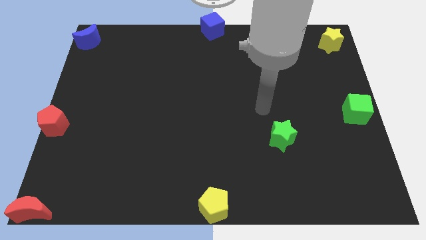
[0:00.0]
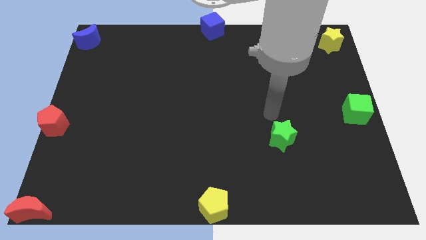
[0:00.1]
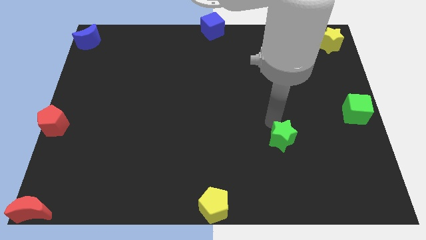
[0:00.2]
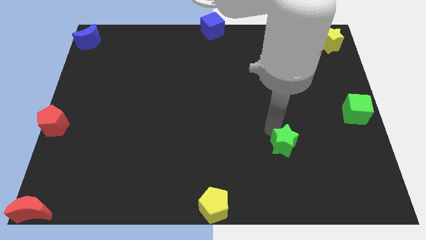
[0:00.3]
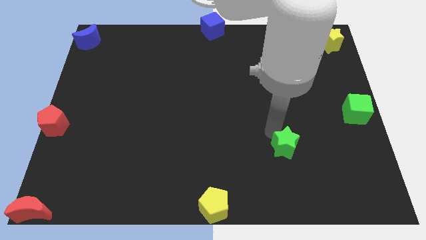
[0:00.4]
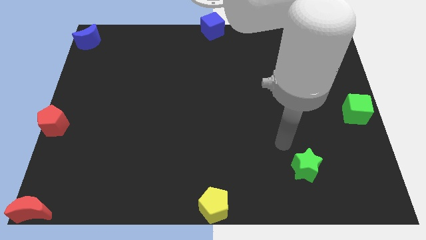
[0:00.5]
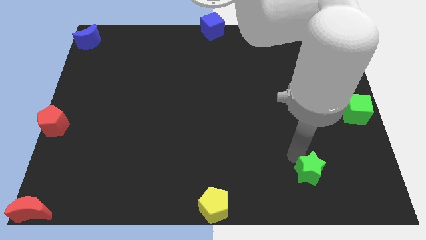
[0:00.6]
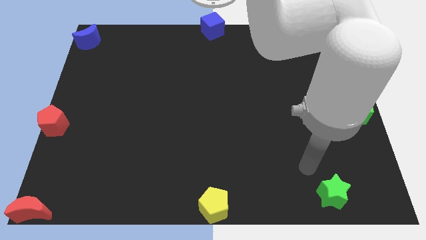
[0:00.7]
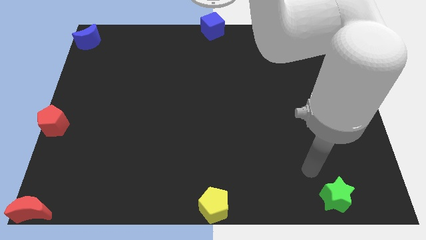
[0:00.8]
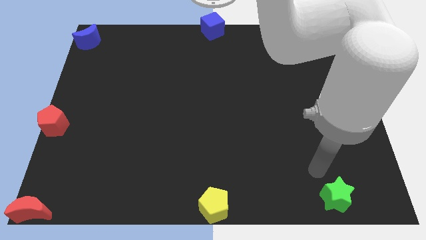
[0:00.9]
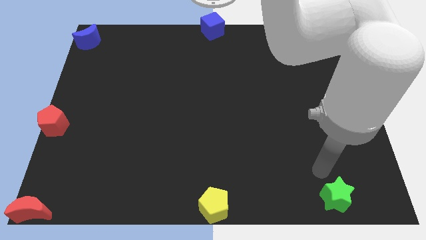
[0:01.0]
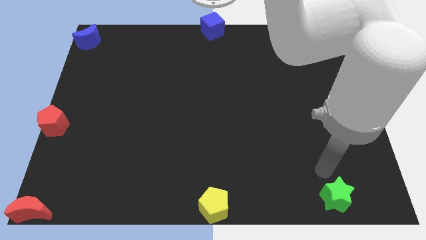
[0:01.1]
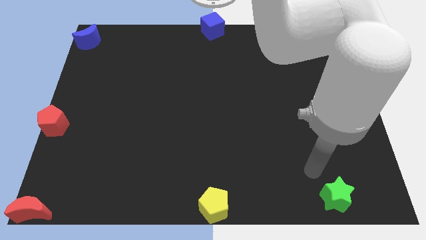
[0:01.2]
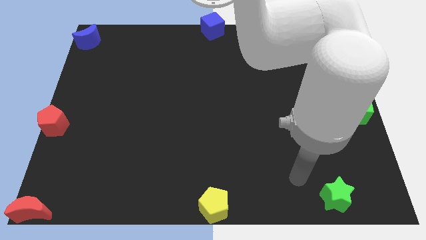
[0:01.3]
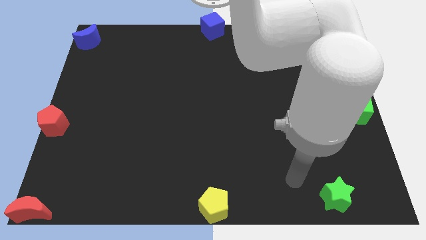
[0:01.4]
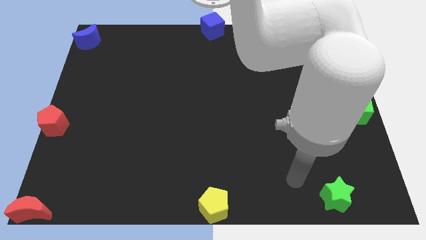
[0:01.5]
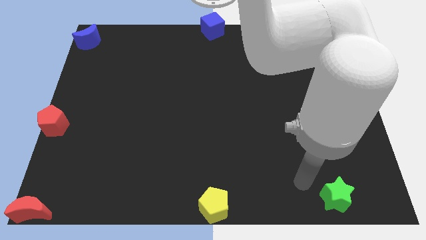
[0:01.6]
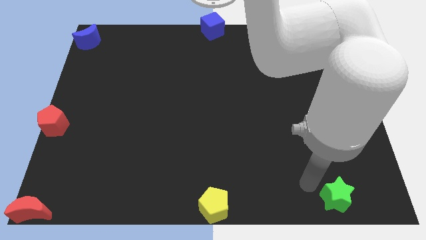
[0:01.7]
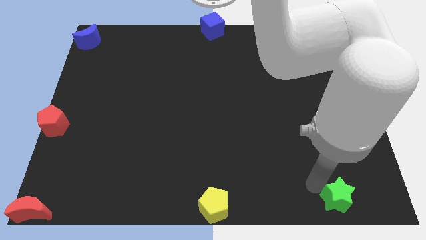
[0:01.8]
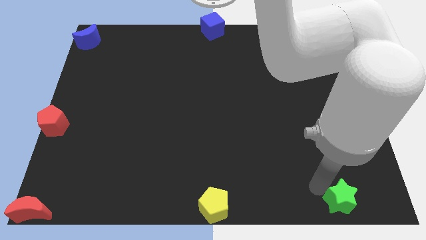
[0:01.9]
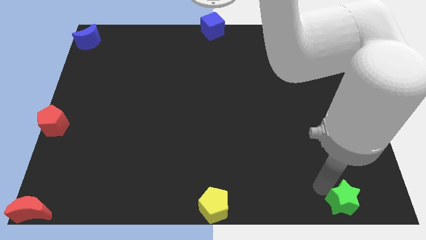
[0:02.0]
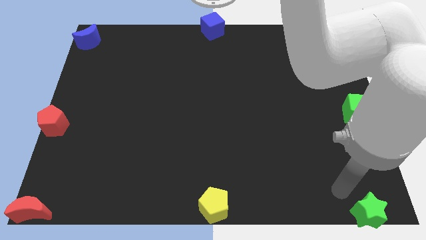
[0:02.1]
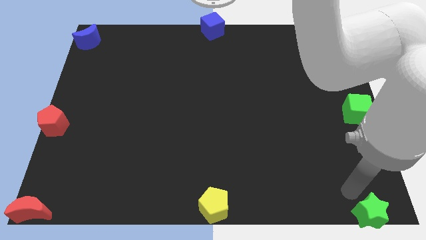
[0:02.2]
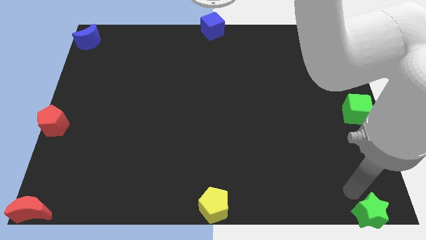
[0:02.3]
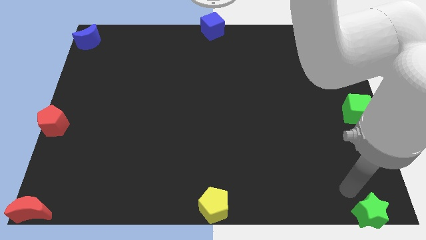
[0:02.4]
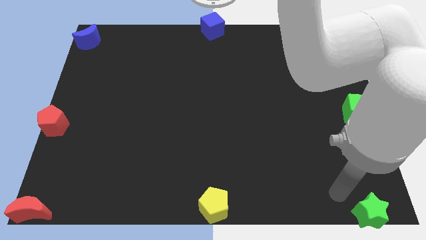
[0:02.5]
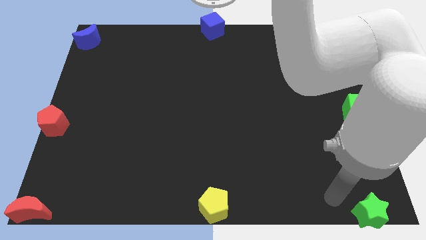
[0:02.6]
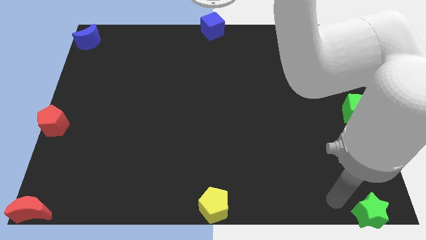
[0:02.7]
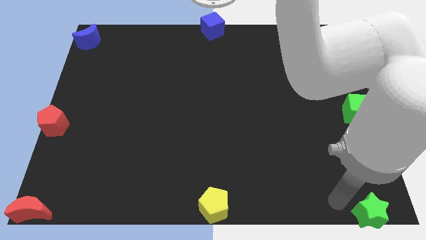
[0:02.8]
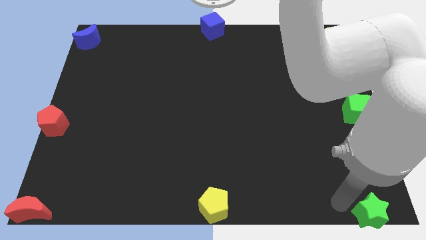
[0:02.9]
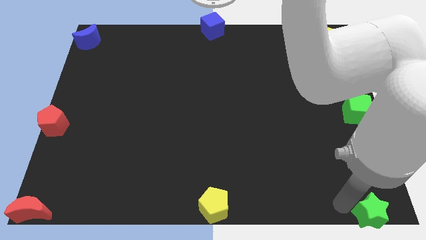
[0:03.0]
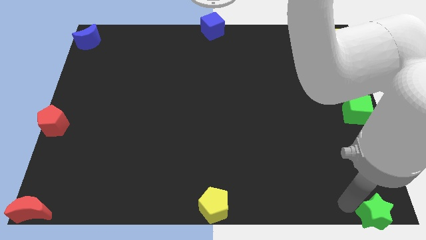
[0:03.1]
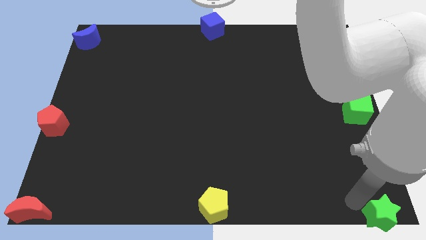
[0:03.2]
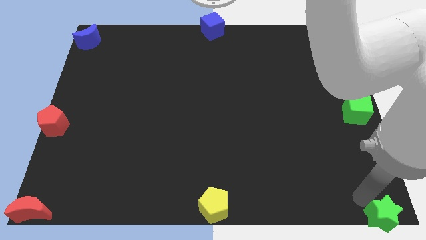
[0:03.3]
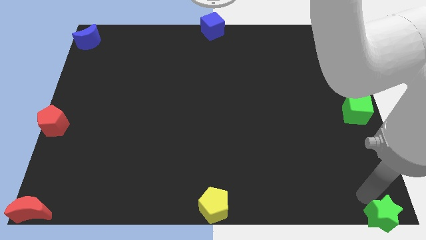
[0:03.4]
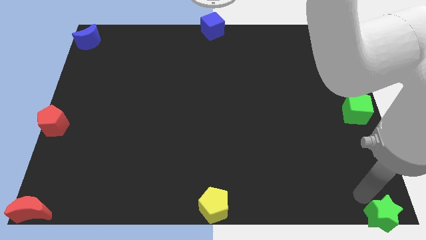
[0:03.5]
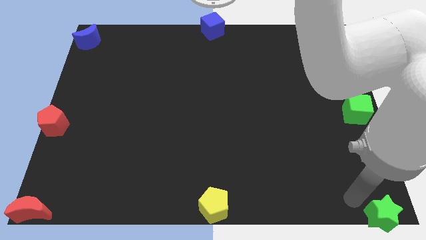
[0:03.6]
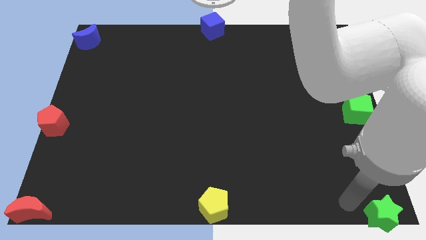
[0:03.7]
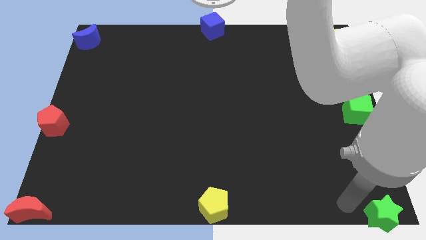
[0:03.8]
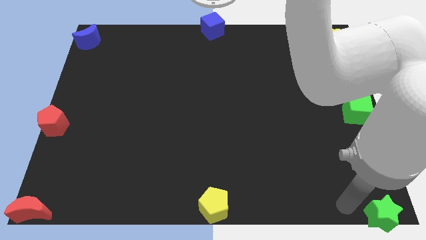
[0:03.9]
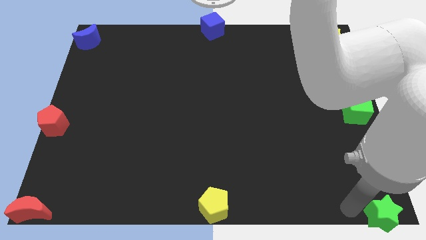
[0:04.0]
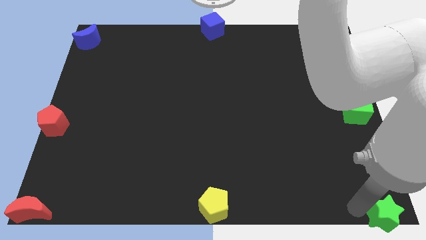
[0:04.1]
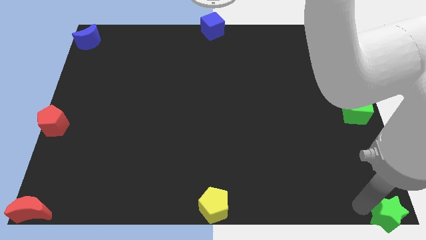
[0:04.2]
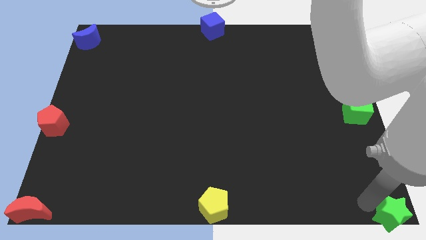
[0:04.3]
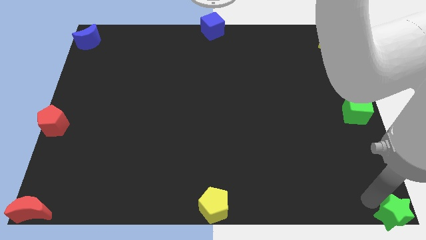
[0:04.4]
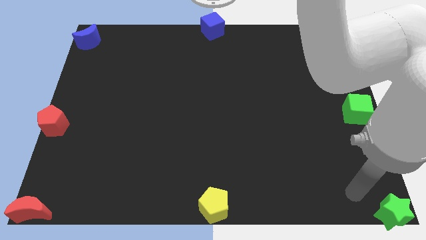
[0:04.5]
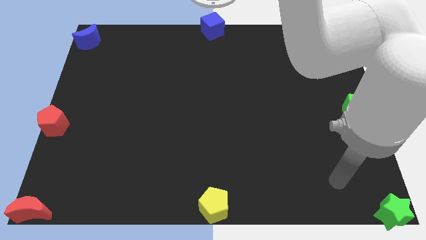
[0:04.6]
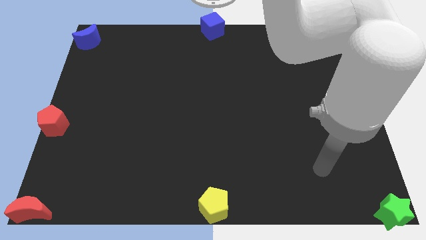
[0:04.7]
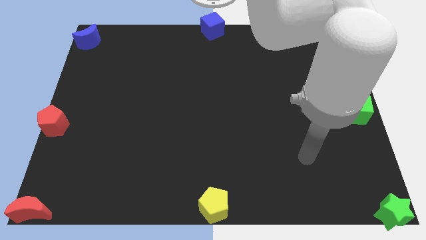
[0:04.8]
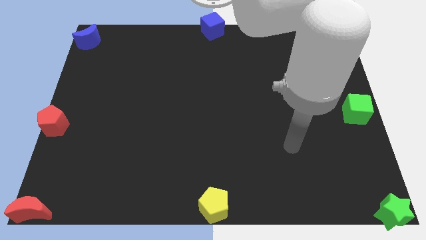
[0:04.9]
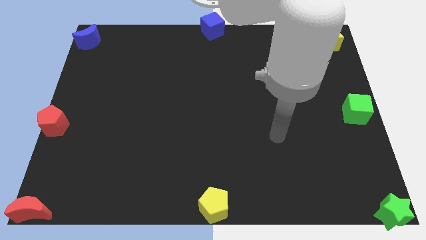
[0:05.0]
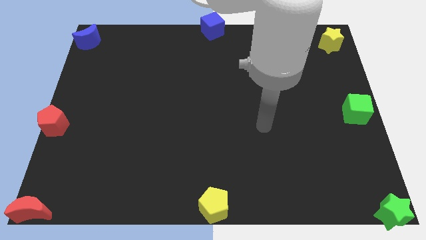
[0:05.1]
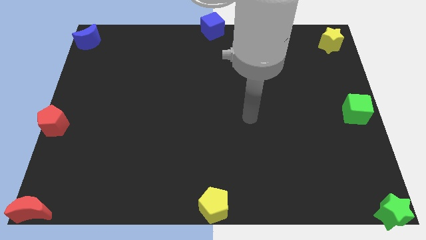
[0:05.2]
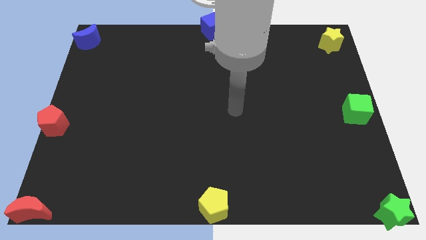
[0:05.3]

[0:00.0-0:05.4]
push the green star to the bottom right corner of the board

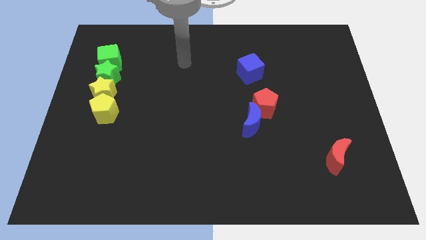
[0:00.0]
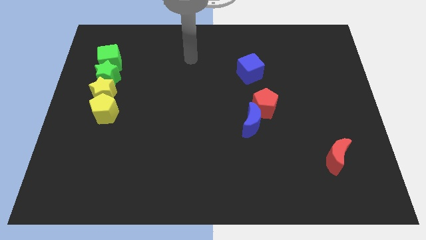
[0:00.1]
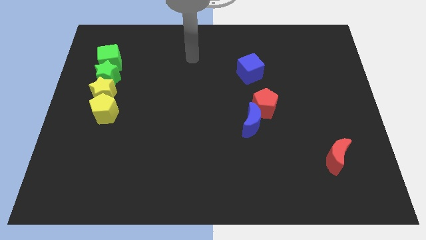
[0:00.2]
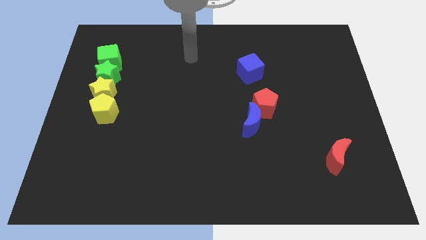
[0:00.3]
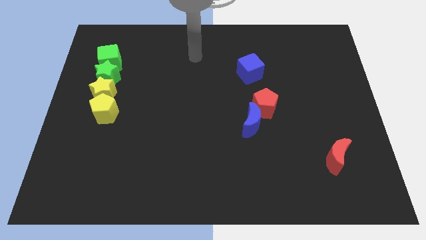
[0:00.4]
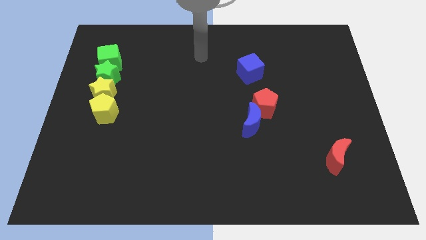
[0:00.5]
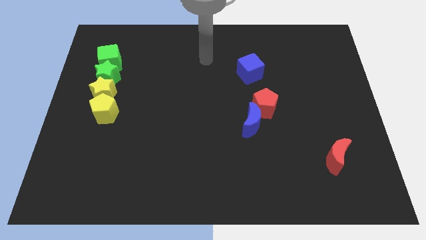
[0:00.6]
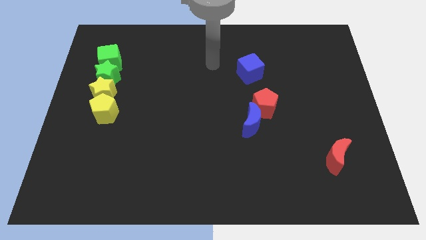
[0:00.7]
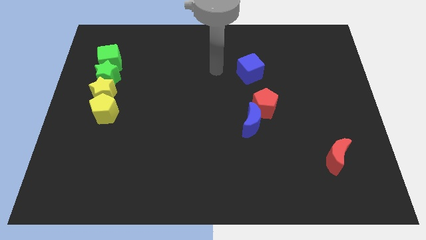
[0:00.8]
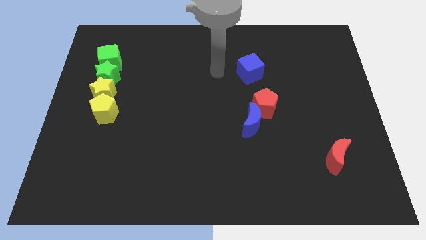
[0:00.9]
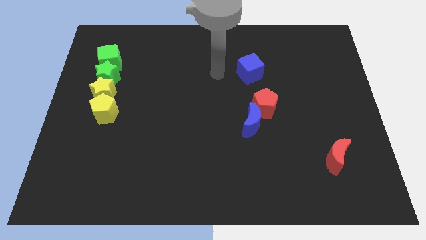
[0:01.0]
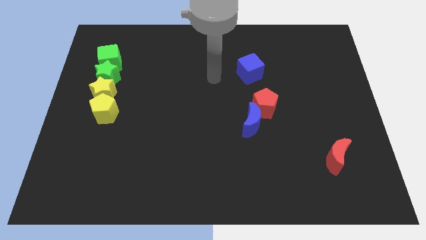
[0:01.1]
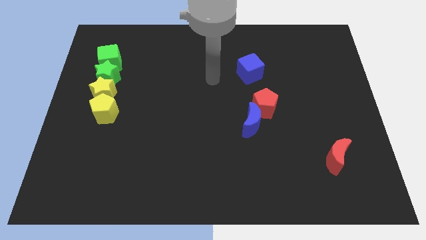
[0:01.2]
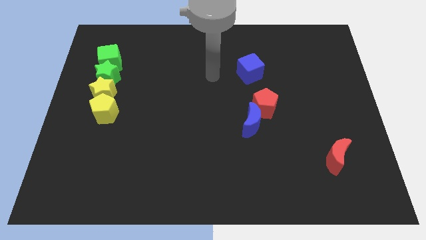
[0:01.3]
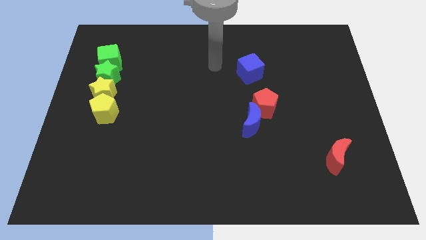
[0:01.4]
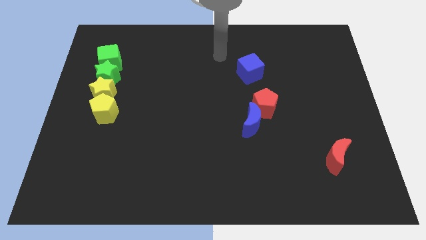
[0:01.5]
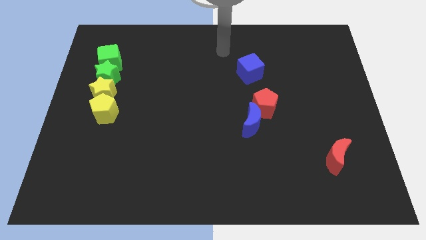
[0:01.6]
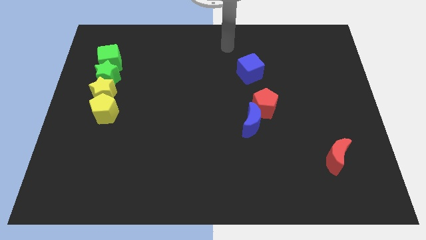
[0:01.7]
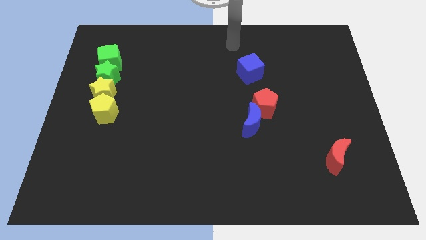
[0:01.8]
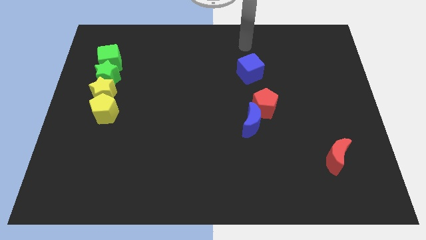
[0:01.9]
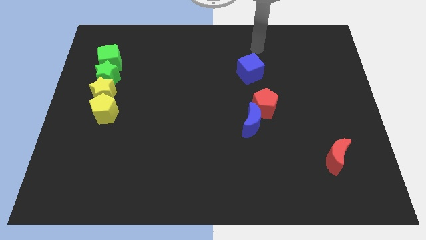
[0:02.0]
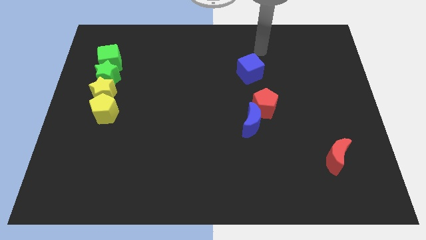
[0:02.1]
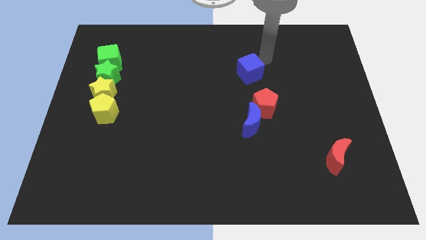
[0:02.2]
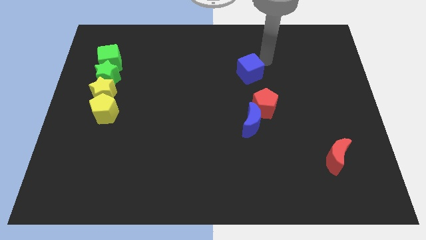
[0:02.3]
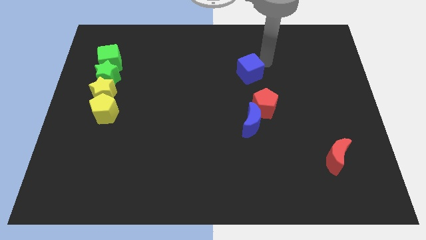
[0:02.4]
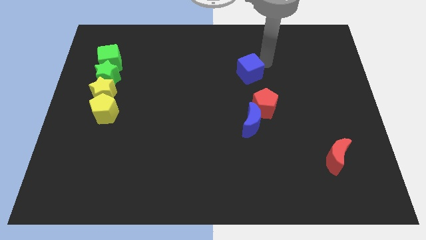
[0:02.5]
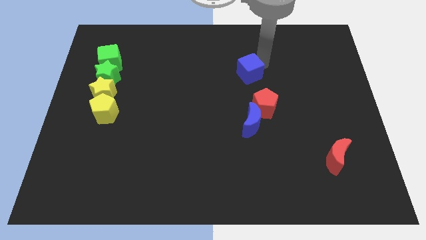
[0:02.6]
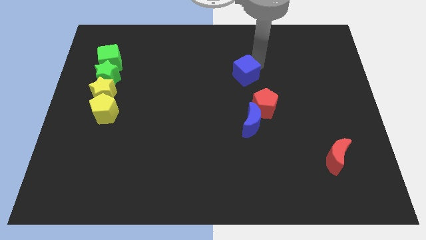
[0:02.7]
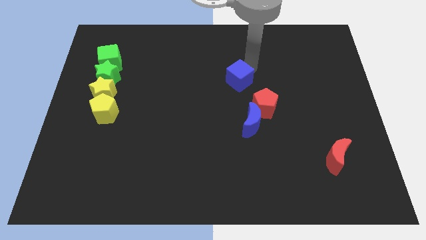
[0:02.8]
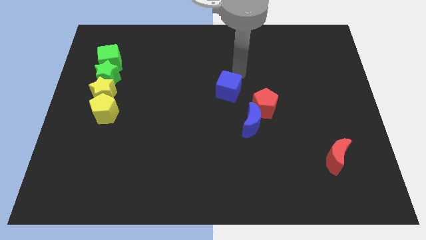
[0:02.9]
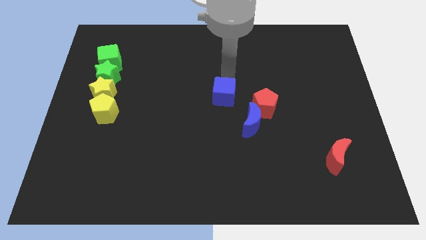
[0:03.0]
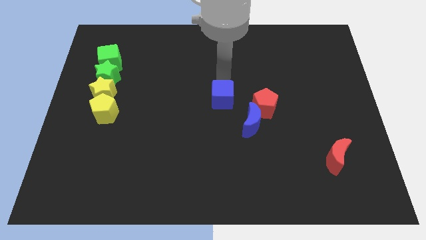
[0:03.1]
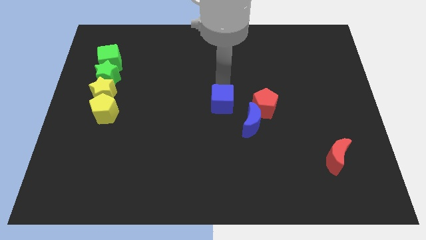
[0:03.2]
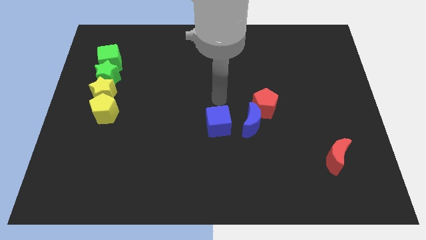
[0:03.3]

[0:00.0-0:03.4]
place blue cube to the center of the board

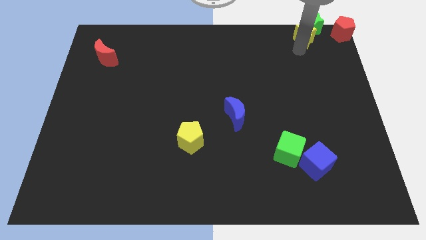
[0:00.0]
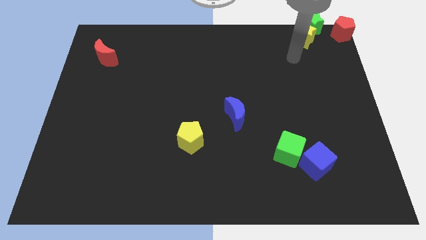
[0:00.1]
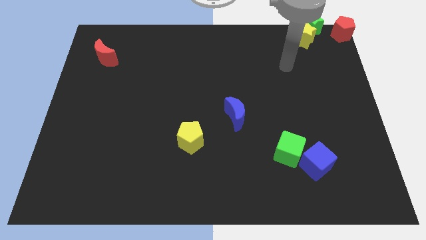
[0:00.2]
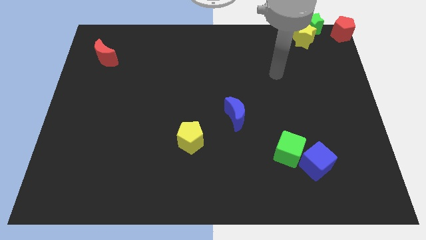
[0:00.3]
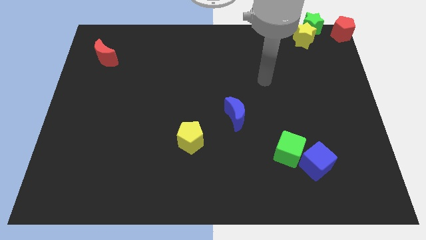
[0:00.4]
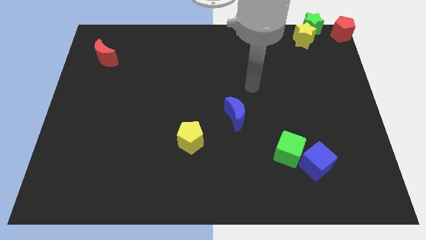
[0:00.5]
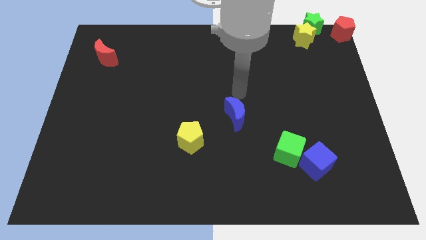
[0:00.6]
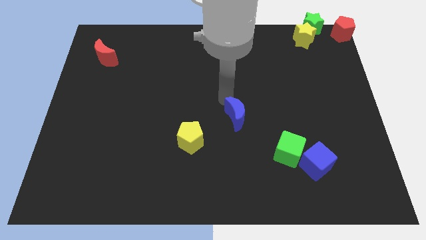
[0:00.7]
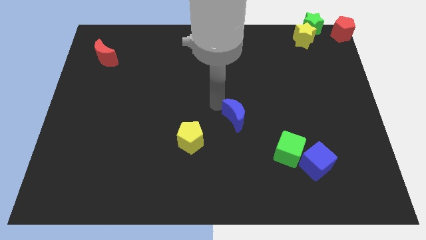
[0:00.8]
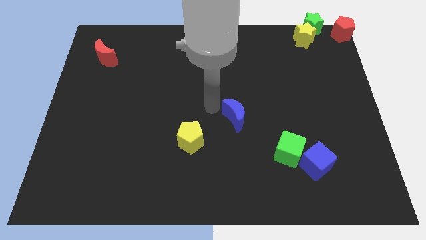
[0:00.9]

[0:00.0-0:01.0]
move your arm to the center of the board
